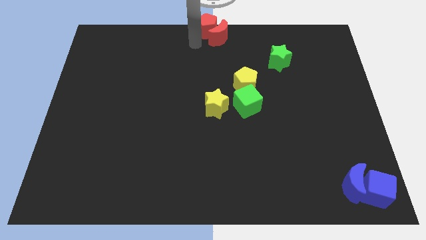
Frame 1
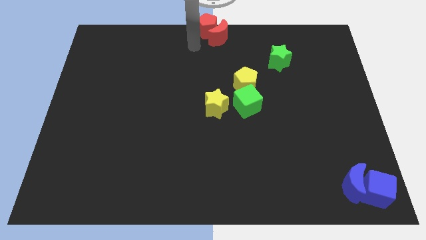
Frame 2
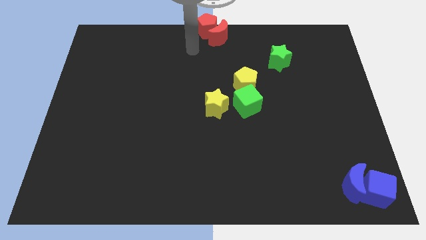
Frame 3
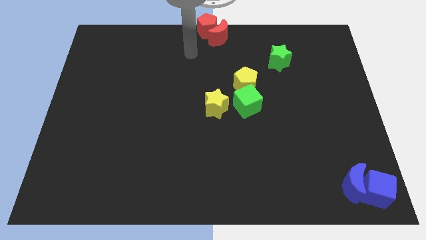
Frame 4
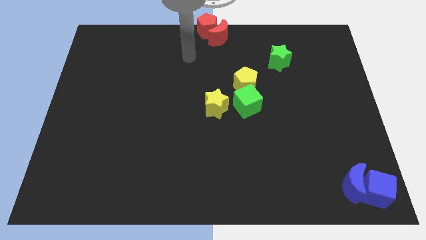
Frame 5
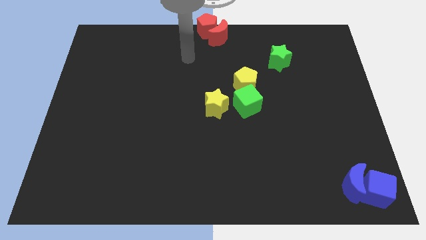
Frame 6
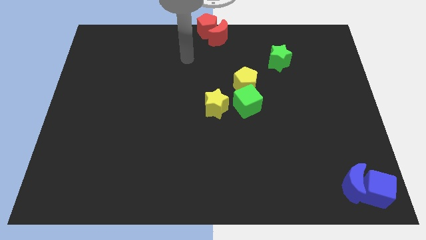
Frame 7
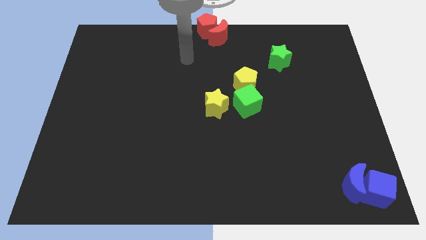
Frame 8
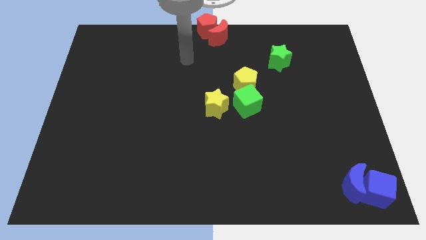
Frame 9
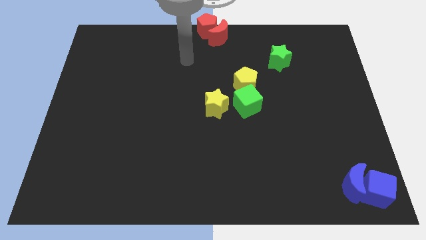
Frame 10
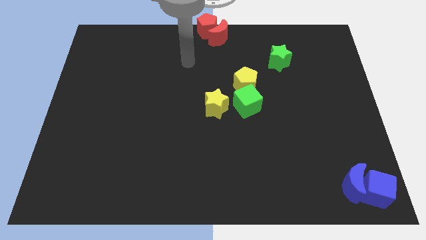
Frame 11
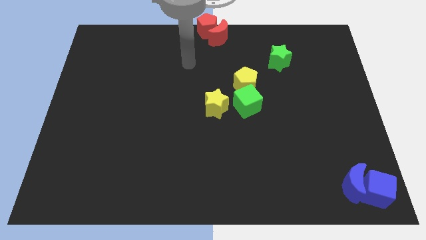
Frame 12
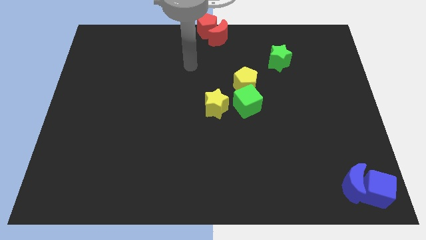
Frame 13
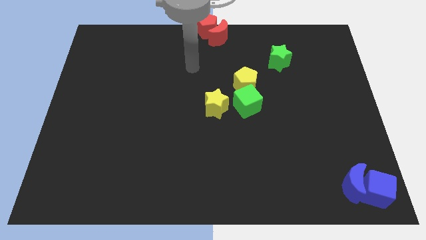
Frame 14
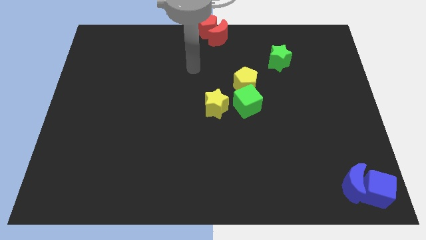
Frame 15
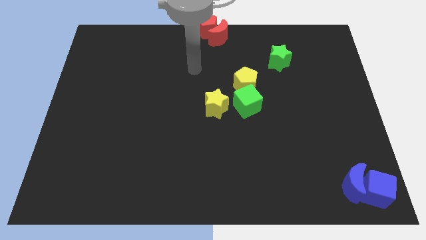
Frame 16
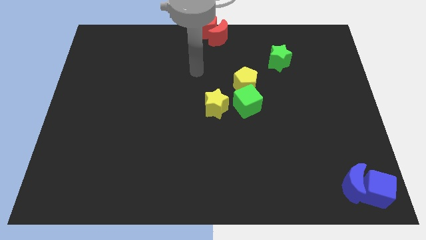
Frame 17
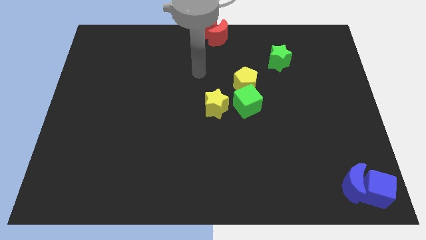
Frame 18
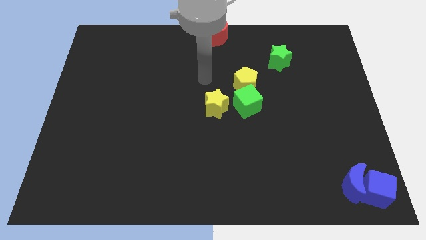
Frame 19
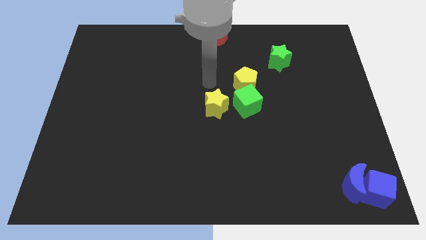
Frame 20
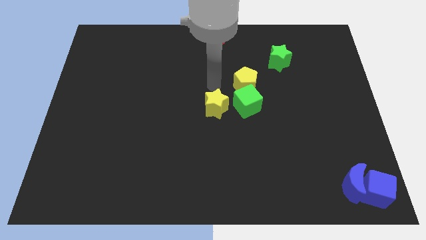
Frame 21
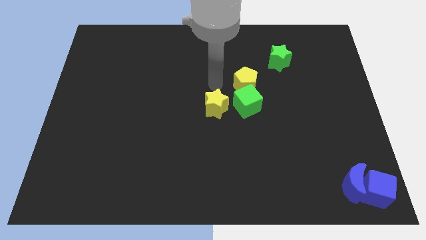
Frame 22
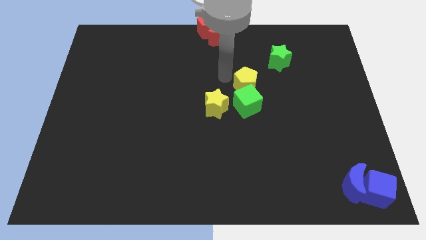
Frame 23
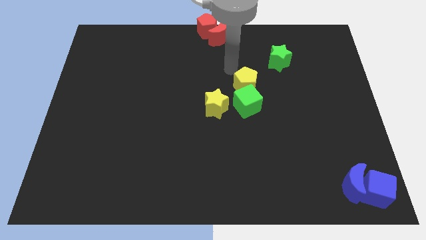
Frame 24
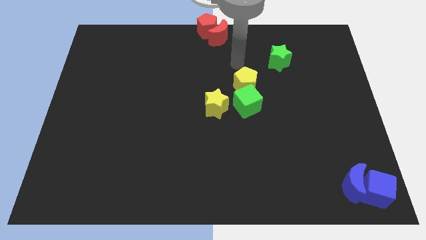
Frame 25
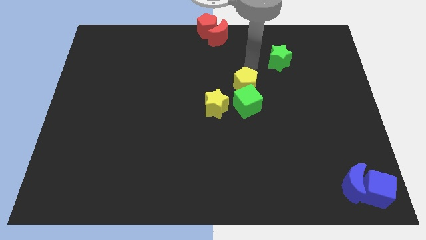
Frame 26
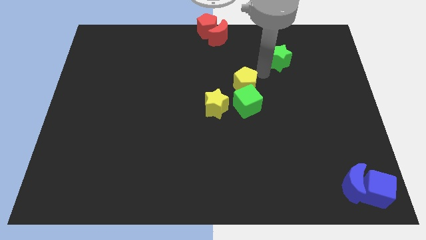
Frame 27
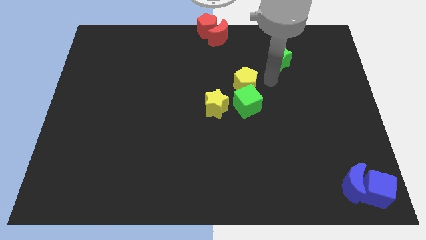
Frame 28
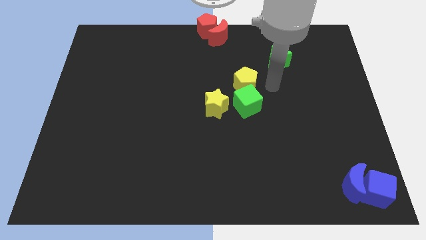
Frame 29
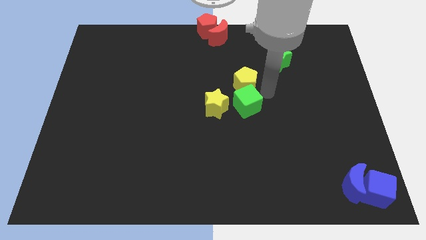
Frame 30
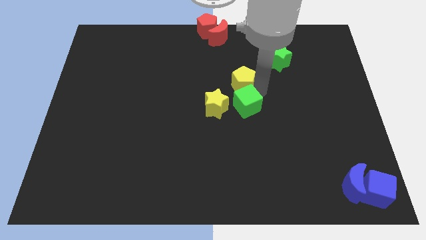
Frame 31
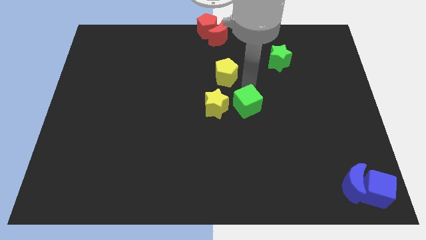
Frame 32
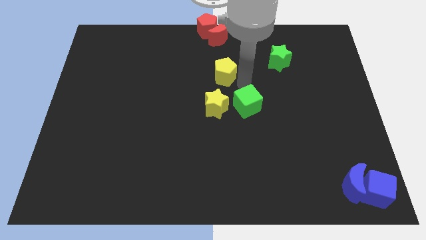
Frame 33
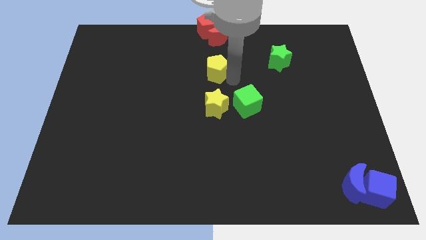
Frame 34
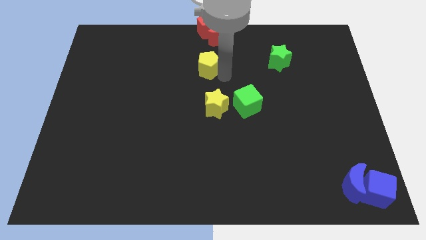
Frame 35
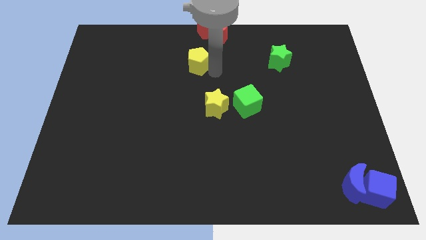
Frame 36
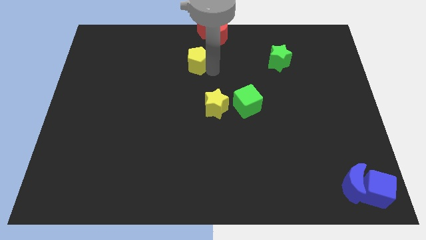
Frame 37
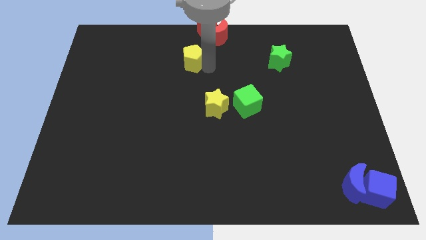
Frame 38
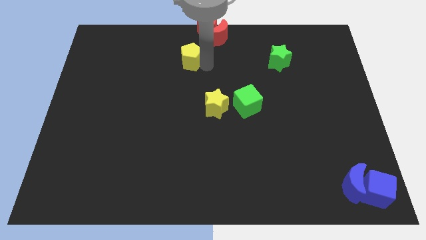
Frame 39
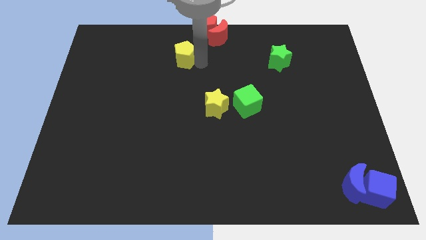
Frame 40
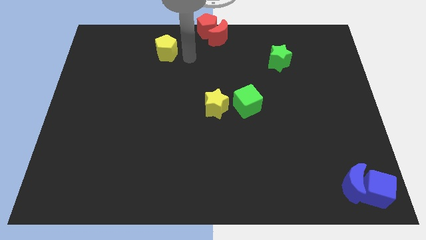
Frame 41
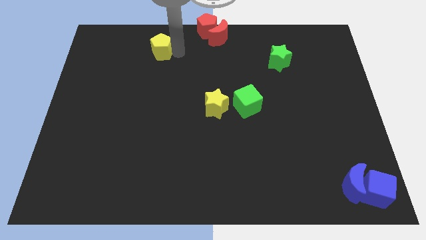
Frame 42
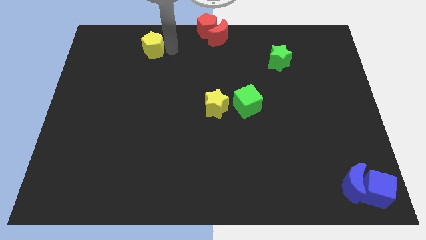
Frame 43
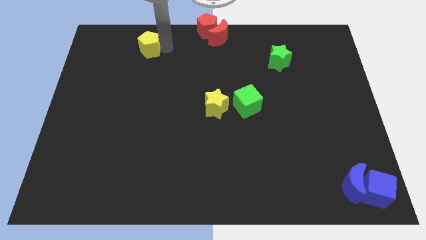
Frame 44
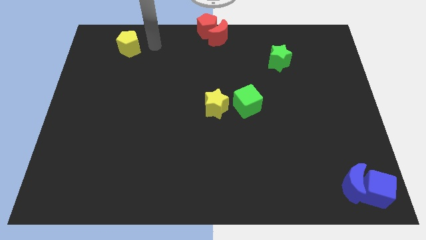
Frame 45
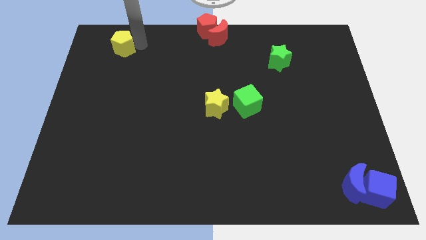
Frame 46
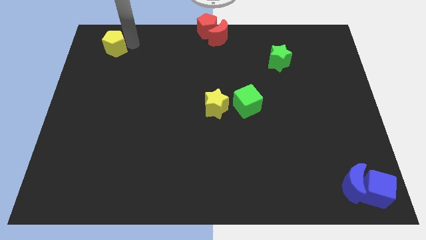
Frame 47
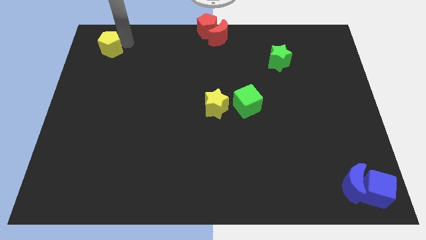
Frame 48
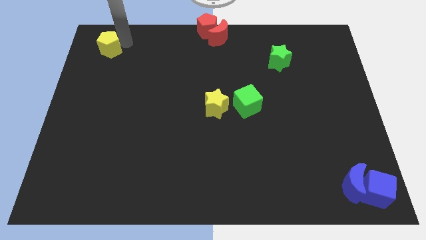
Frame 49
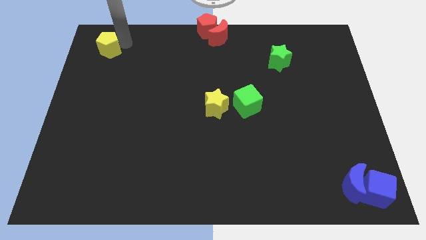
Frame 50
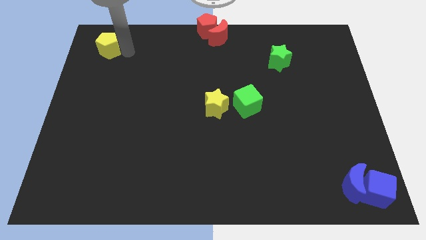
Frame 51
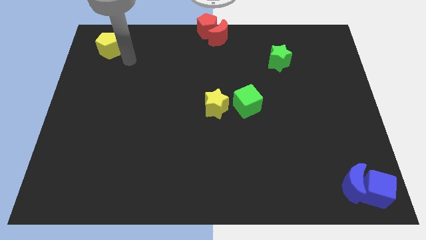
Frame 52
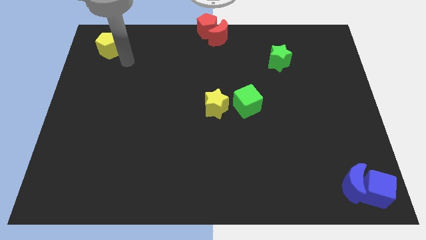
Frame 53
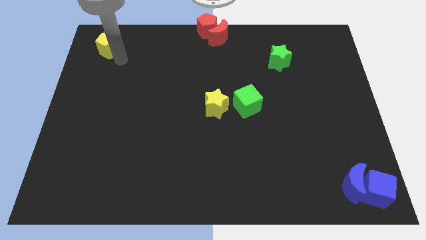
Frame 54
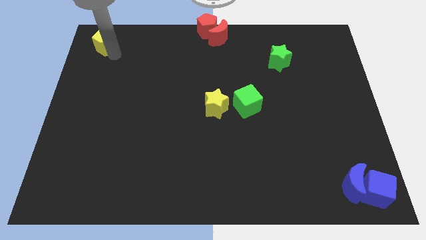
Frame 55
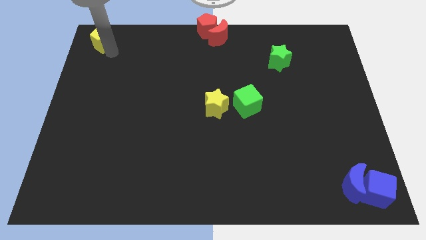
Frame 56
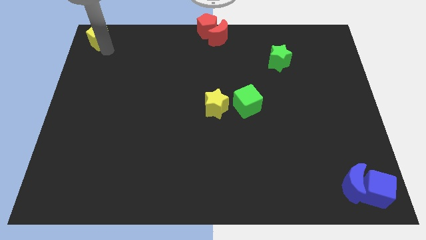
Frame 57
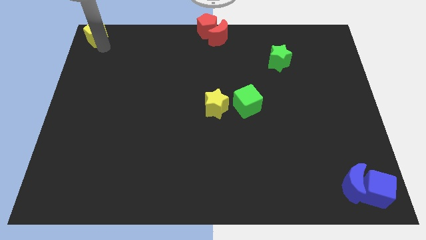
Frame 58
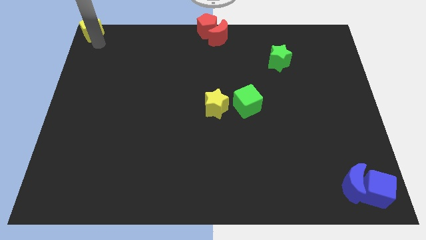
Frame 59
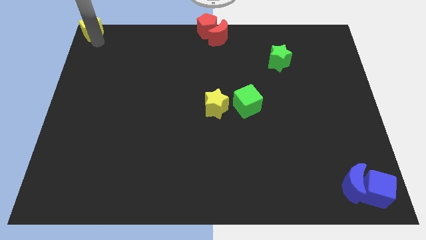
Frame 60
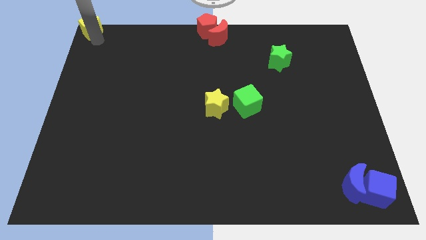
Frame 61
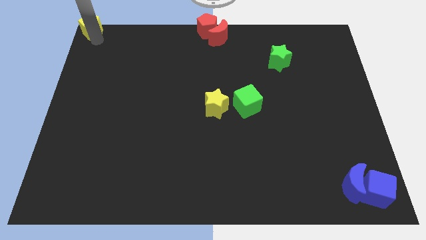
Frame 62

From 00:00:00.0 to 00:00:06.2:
move the yellow pentagon to the top left corner of the board

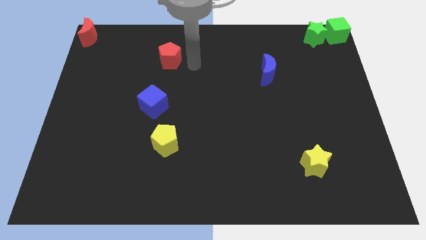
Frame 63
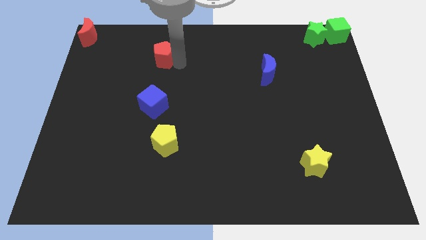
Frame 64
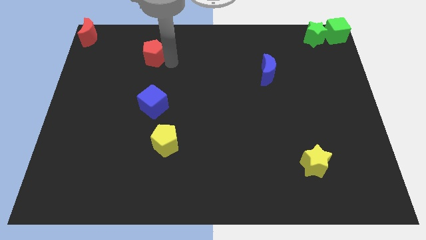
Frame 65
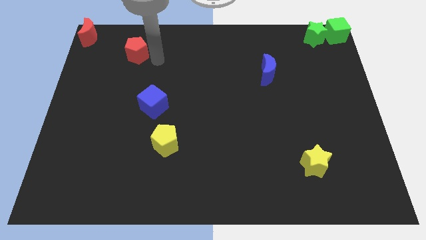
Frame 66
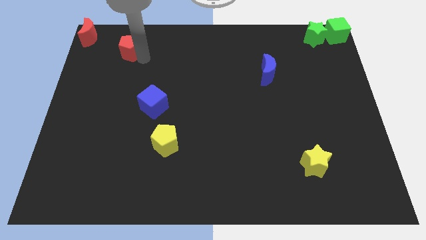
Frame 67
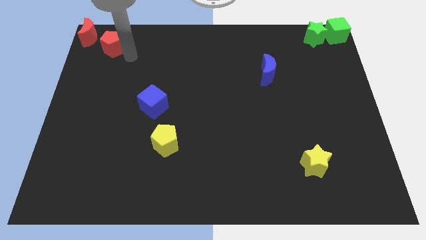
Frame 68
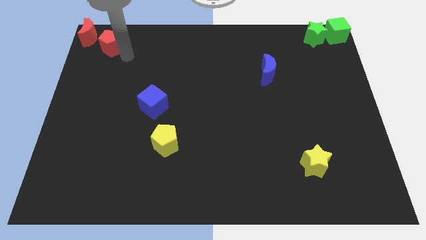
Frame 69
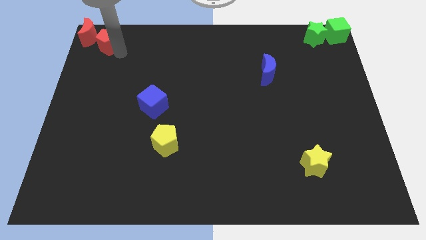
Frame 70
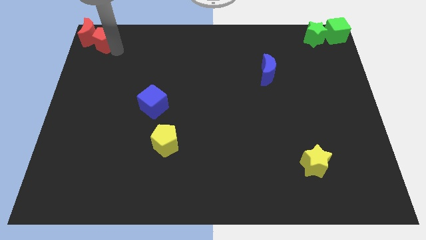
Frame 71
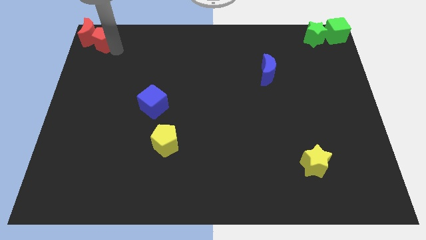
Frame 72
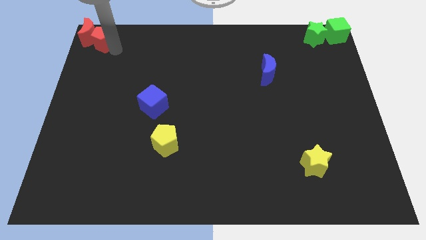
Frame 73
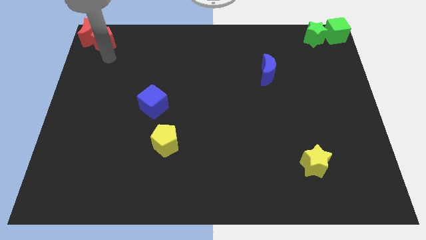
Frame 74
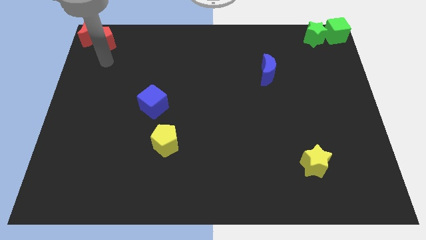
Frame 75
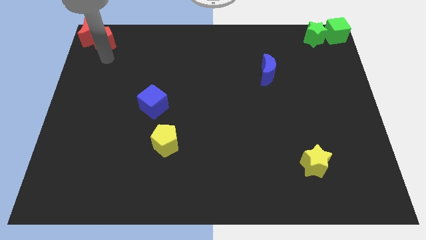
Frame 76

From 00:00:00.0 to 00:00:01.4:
move the red pentagon to the bottom right to the red crescent

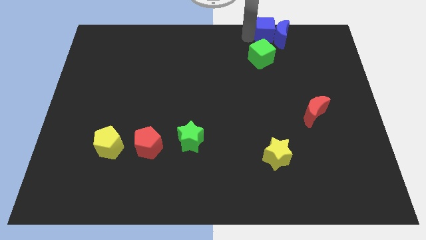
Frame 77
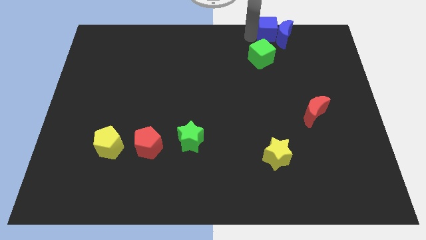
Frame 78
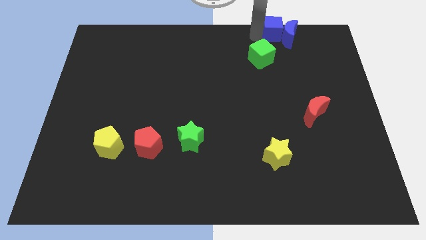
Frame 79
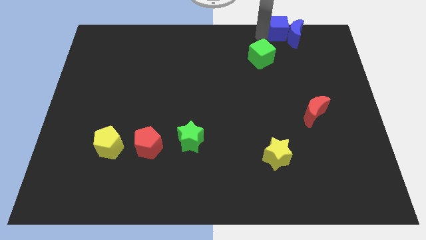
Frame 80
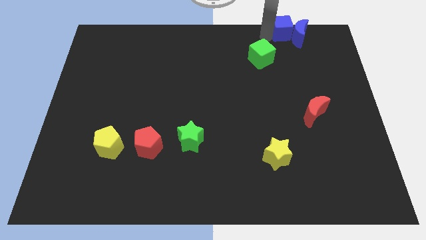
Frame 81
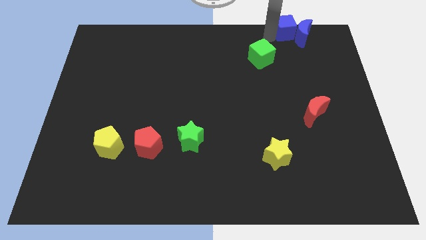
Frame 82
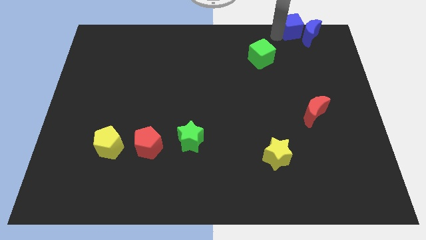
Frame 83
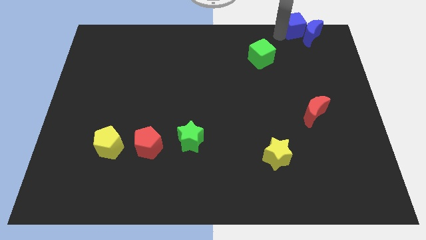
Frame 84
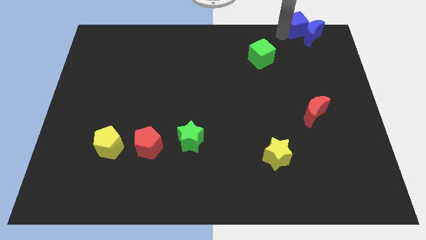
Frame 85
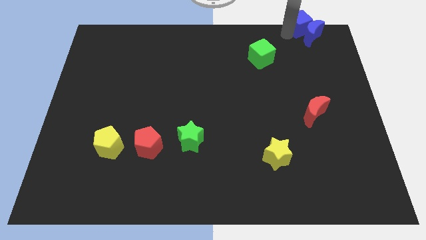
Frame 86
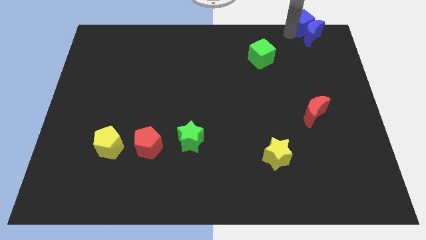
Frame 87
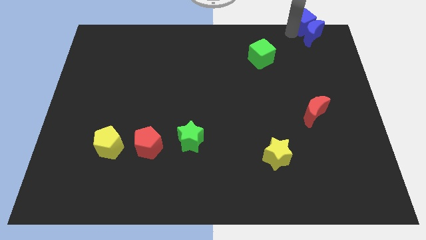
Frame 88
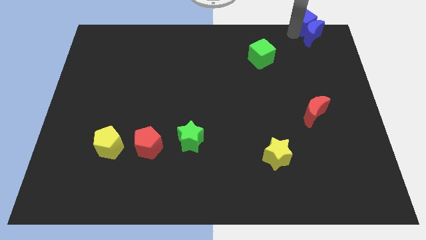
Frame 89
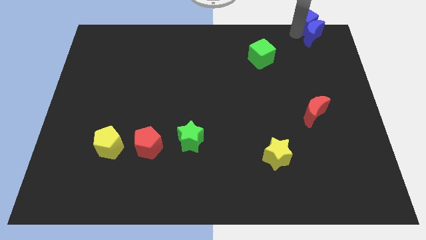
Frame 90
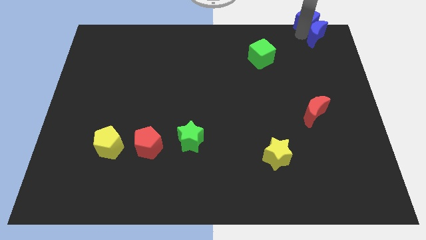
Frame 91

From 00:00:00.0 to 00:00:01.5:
push the blue blocks to the right
